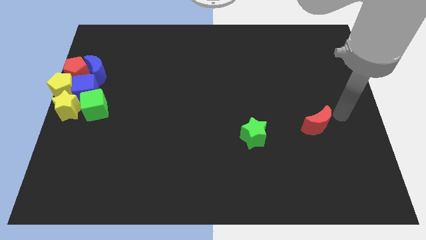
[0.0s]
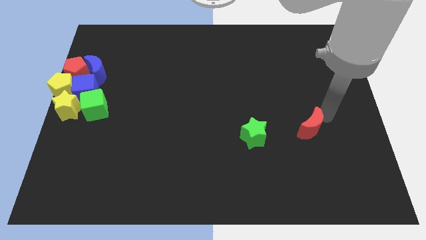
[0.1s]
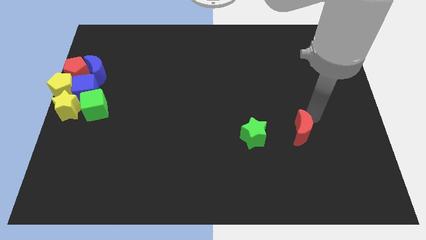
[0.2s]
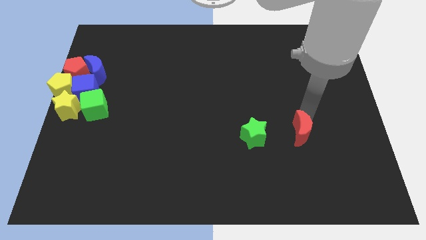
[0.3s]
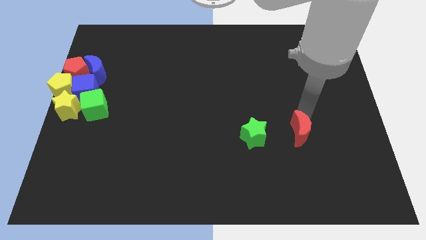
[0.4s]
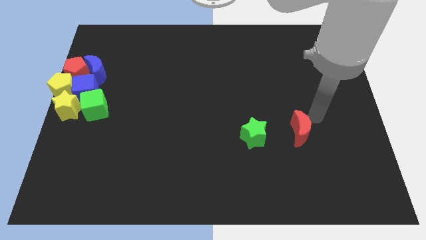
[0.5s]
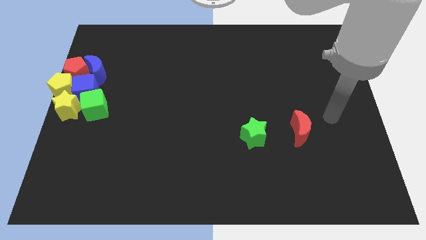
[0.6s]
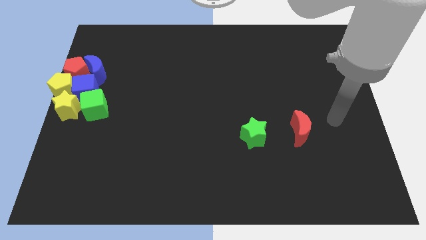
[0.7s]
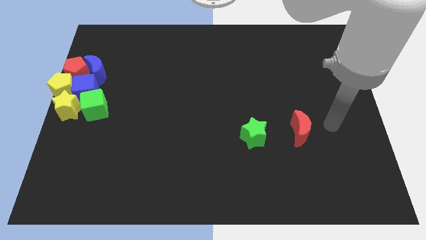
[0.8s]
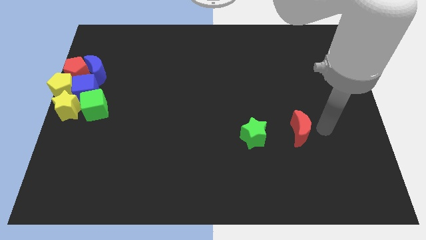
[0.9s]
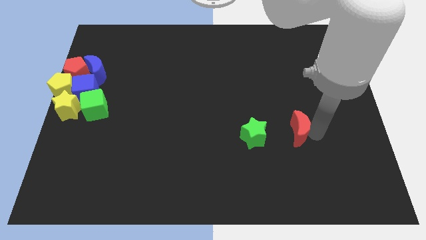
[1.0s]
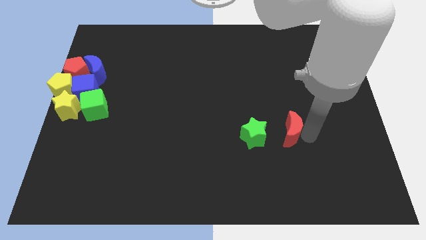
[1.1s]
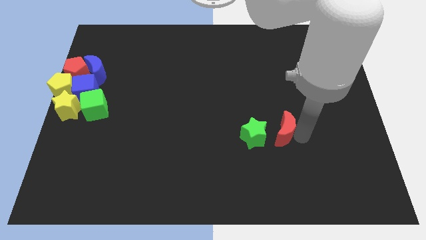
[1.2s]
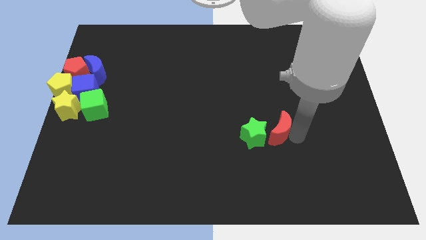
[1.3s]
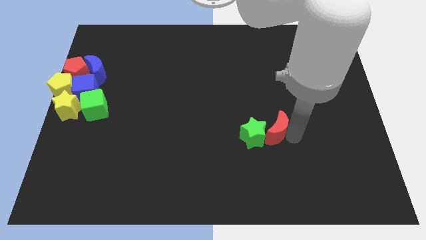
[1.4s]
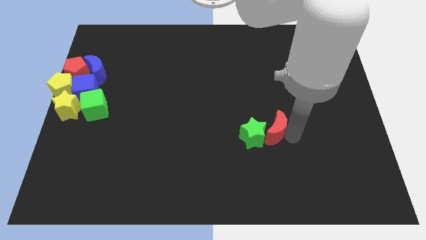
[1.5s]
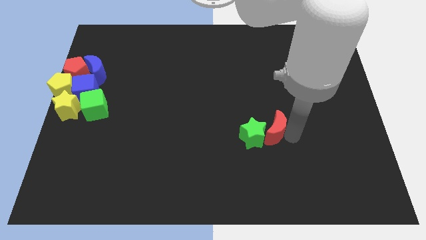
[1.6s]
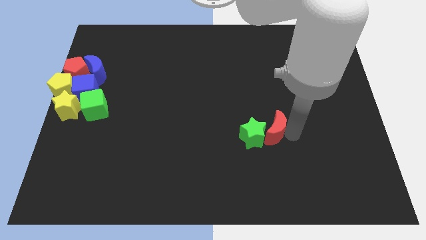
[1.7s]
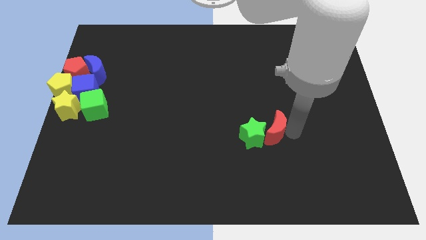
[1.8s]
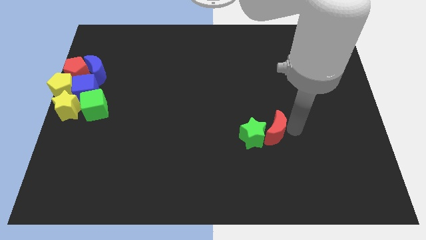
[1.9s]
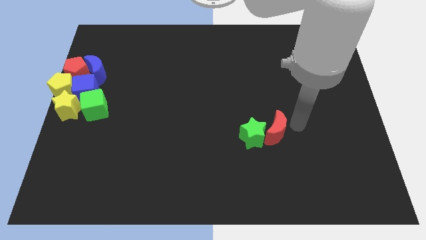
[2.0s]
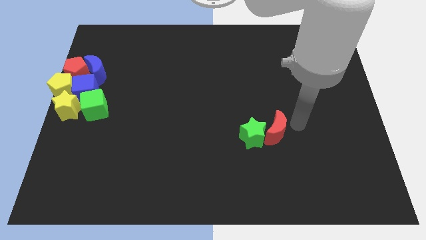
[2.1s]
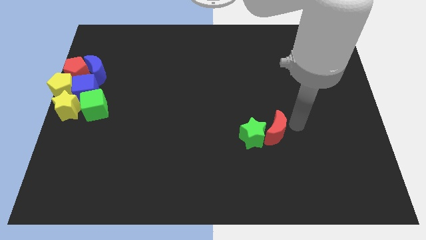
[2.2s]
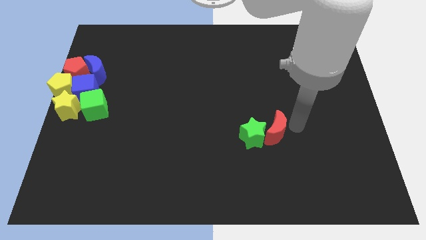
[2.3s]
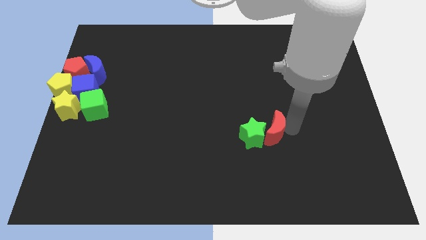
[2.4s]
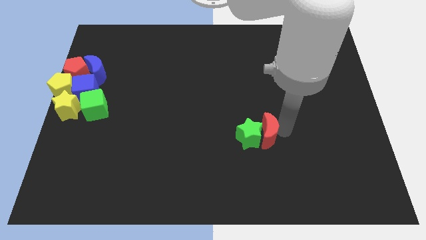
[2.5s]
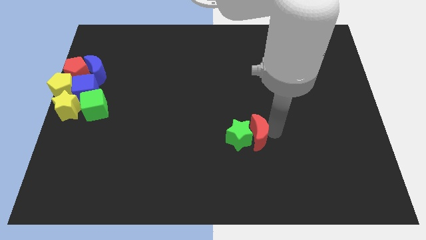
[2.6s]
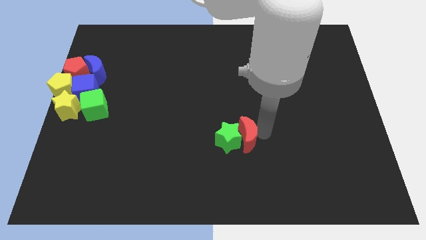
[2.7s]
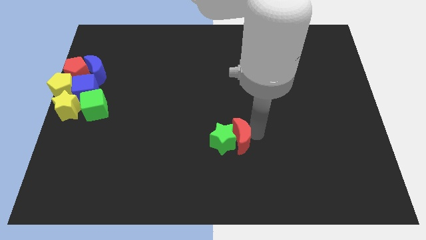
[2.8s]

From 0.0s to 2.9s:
move the red crescent near the green star

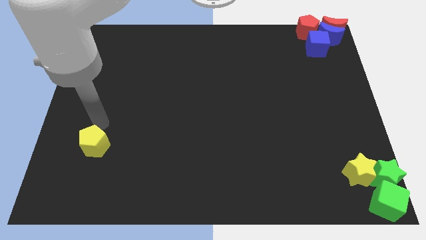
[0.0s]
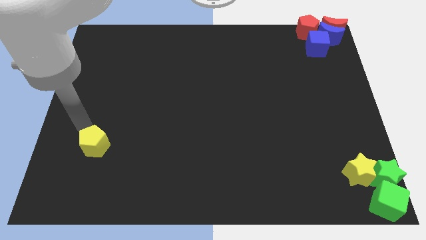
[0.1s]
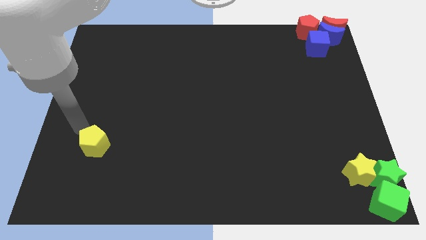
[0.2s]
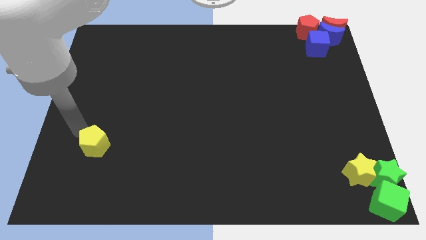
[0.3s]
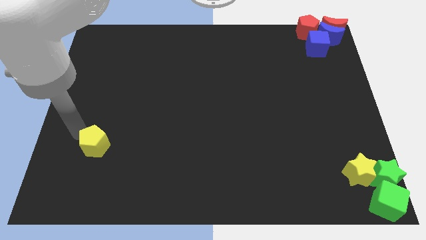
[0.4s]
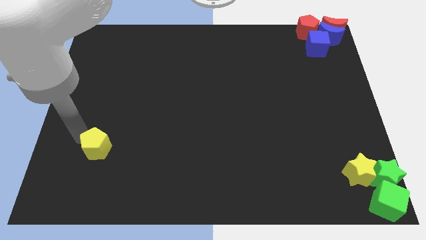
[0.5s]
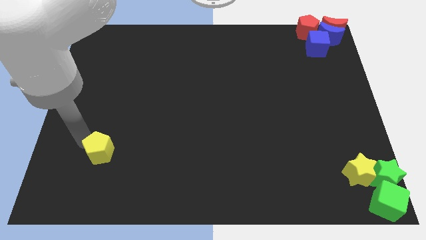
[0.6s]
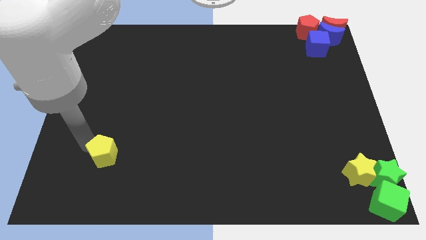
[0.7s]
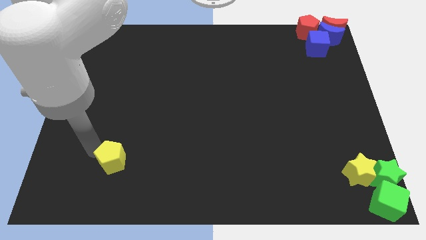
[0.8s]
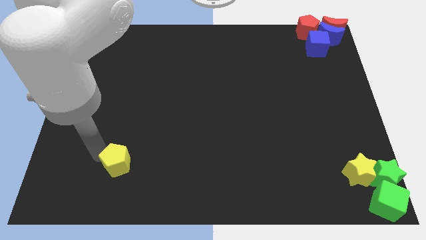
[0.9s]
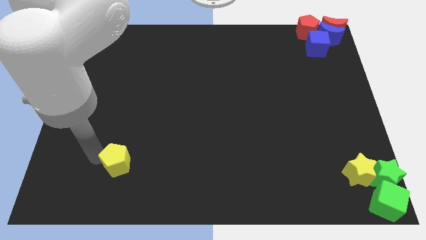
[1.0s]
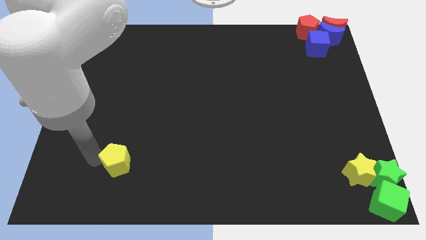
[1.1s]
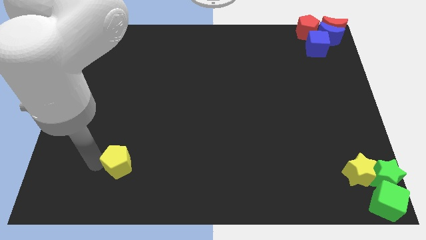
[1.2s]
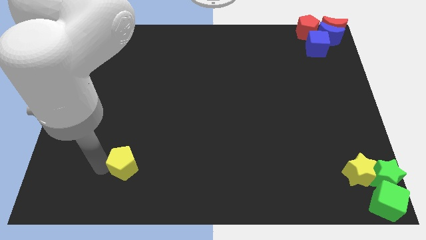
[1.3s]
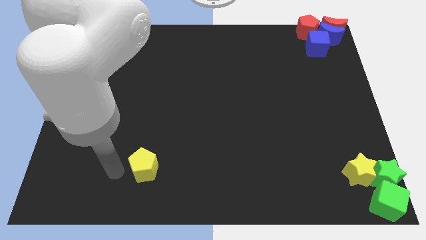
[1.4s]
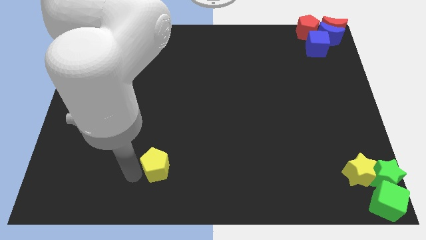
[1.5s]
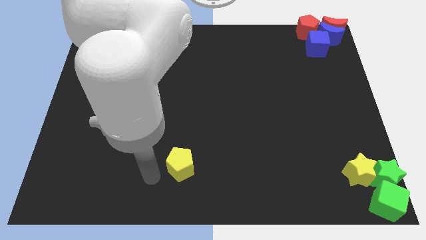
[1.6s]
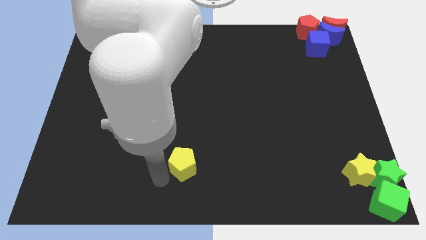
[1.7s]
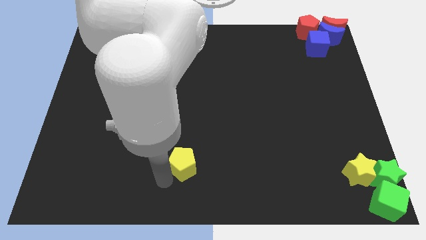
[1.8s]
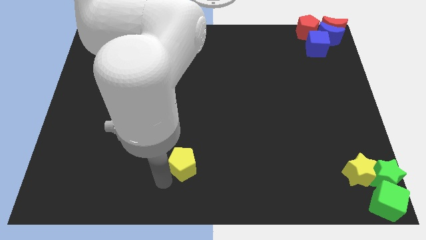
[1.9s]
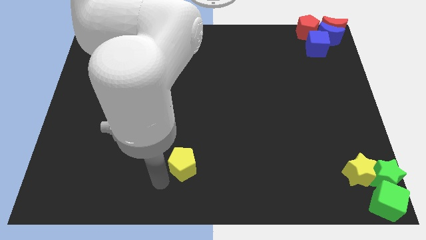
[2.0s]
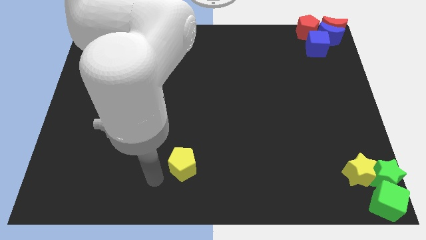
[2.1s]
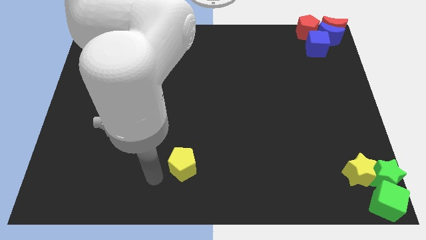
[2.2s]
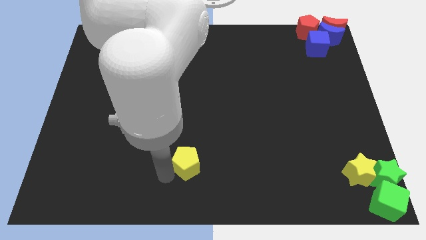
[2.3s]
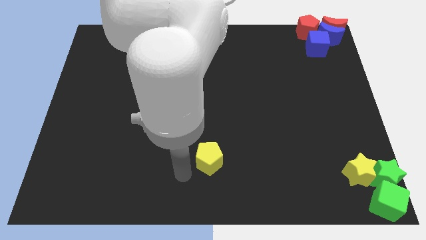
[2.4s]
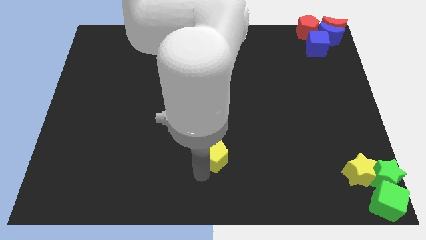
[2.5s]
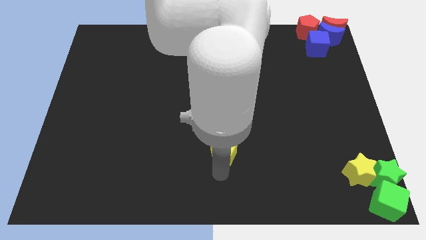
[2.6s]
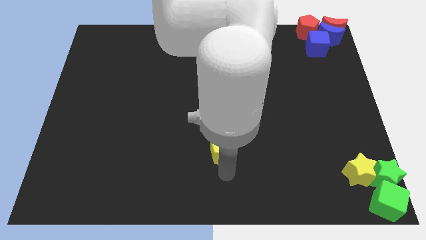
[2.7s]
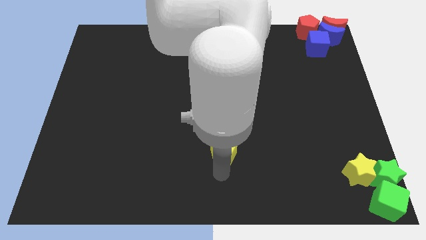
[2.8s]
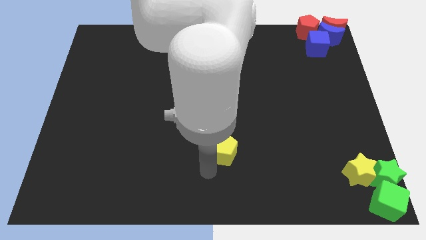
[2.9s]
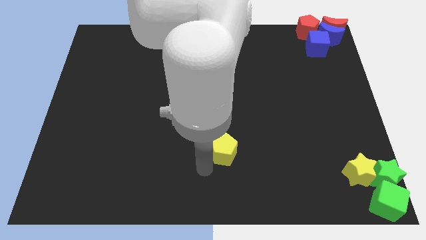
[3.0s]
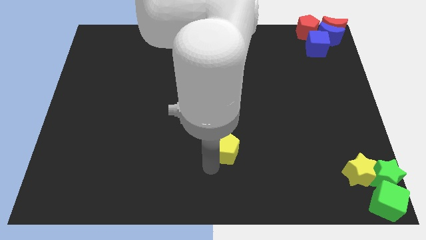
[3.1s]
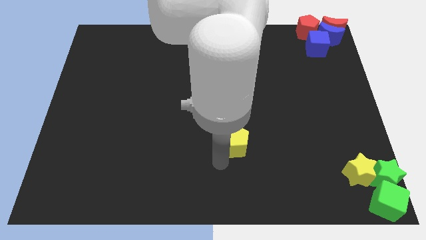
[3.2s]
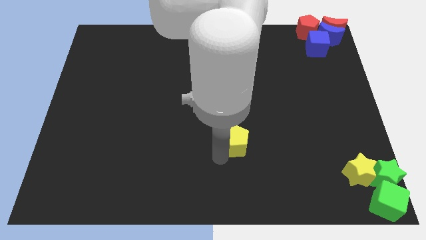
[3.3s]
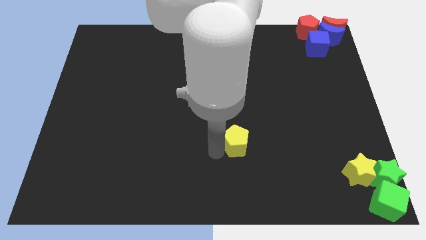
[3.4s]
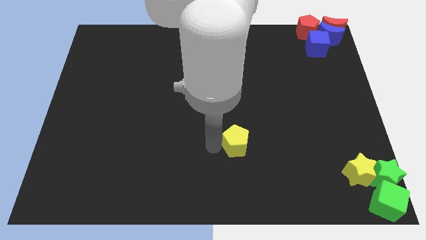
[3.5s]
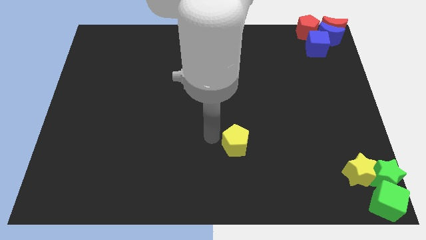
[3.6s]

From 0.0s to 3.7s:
move the yellow pentagon towards right

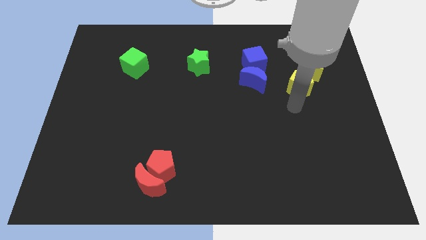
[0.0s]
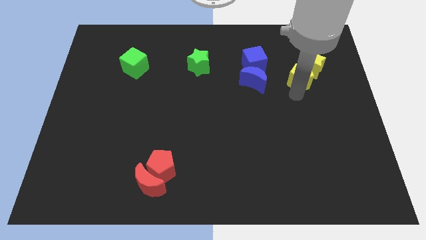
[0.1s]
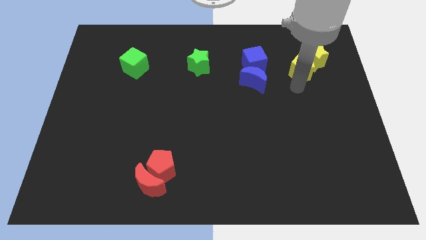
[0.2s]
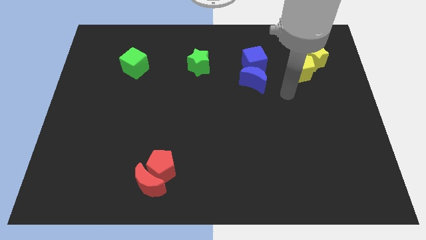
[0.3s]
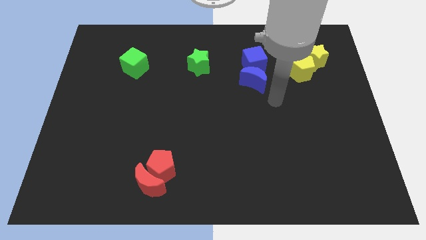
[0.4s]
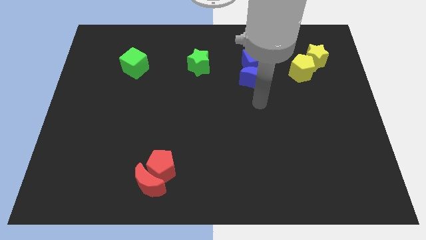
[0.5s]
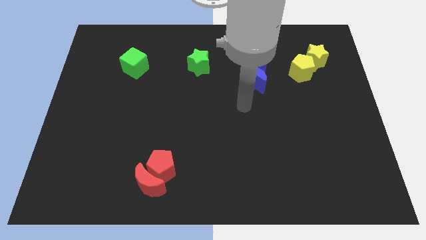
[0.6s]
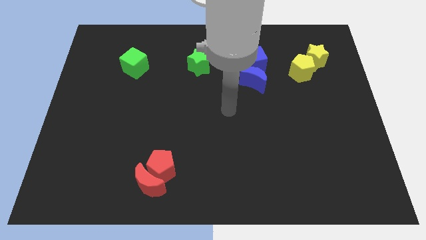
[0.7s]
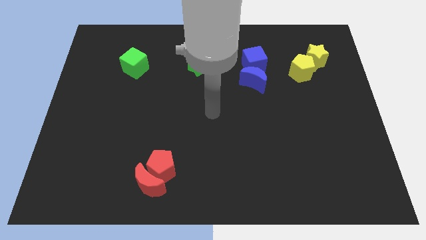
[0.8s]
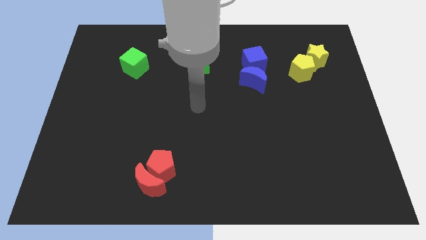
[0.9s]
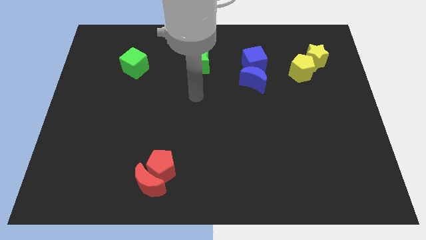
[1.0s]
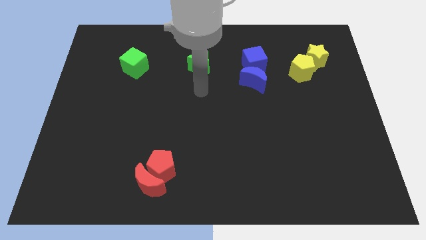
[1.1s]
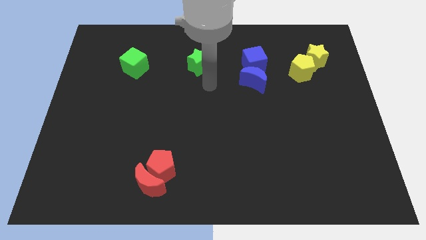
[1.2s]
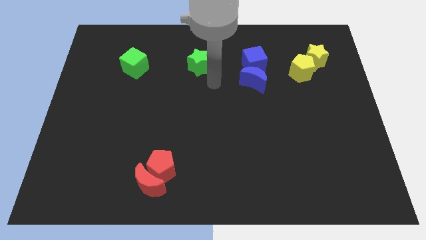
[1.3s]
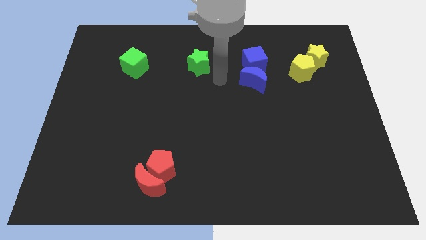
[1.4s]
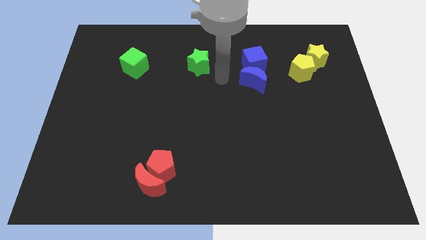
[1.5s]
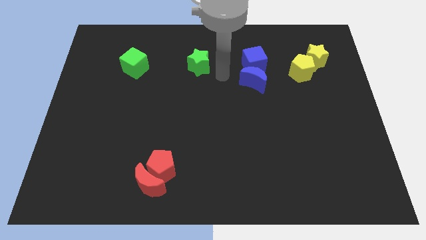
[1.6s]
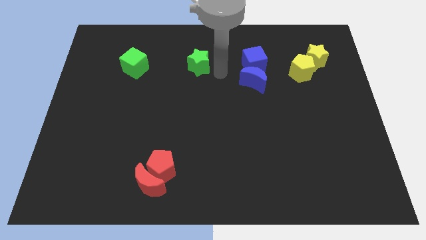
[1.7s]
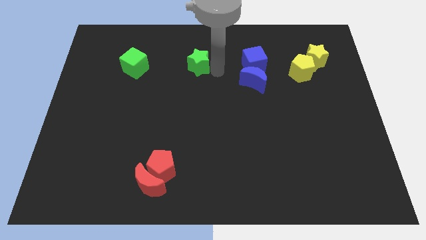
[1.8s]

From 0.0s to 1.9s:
move the arm to the right of the green star

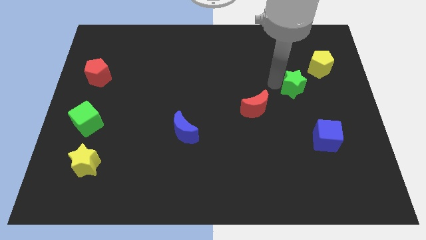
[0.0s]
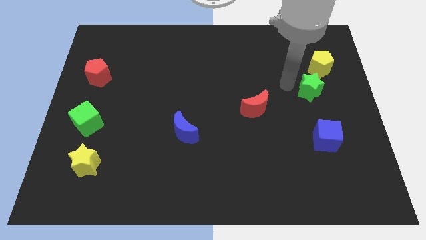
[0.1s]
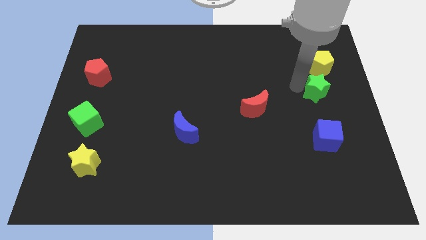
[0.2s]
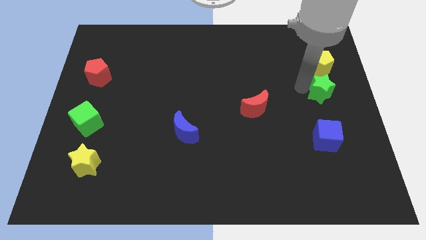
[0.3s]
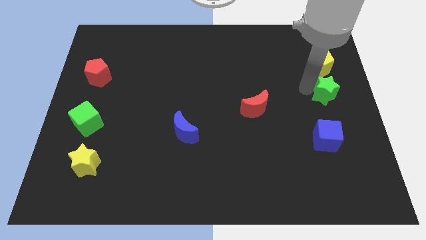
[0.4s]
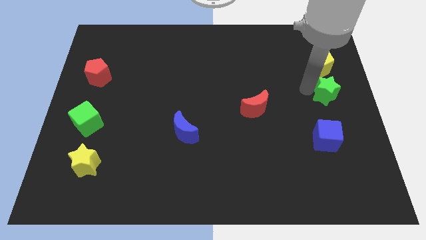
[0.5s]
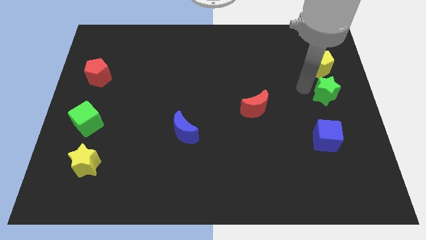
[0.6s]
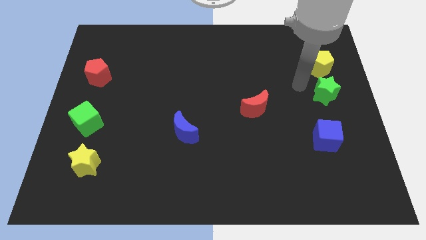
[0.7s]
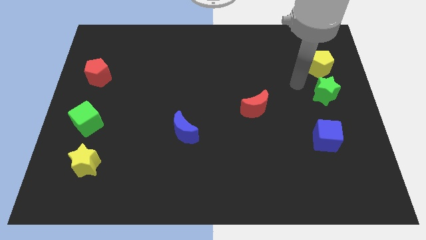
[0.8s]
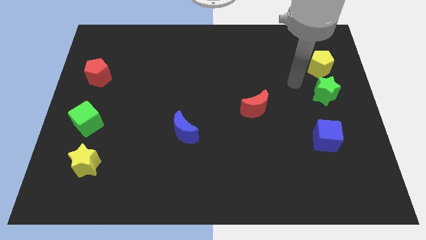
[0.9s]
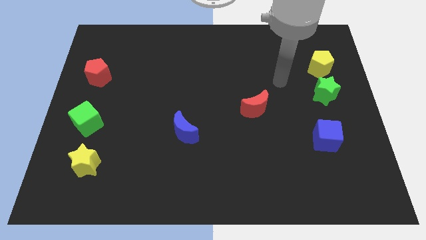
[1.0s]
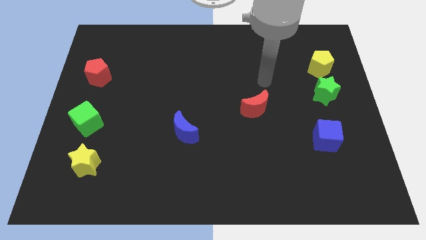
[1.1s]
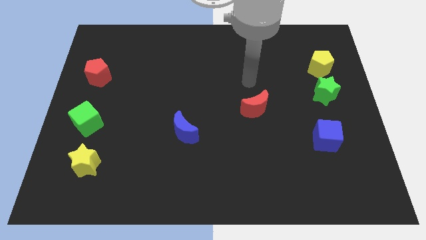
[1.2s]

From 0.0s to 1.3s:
place the green star below the yellow pentagon
